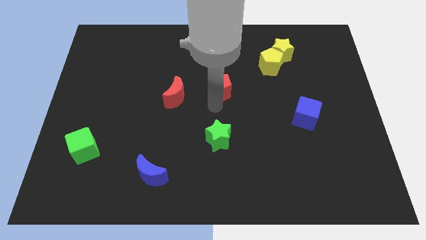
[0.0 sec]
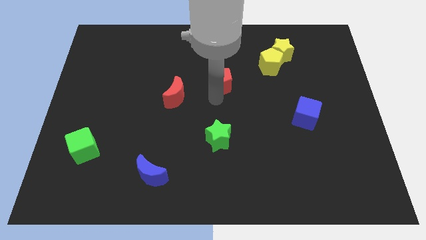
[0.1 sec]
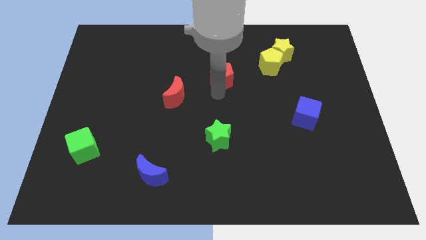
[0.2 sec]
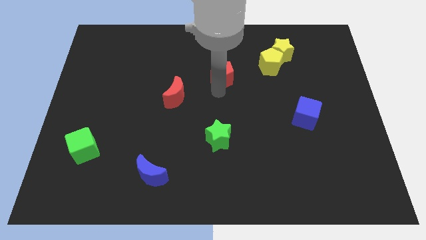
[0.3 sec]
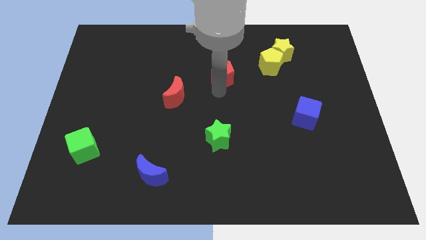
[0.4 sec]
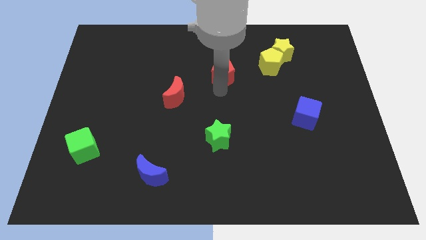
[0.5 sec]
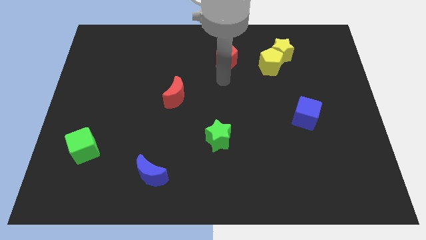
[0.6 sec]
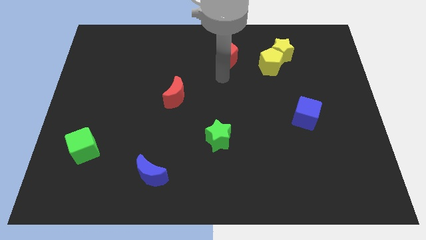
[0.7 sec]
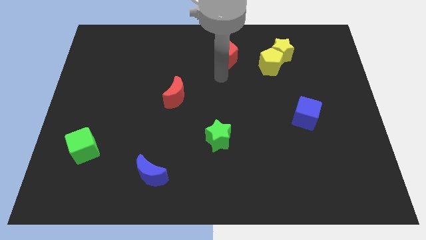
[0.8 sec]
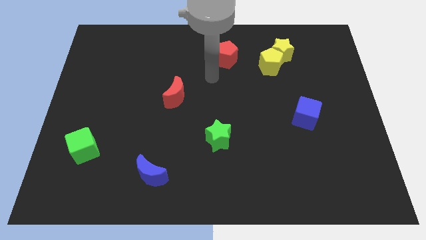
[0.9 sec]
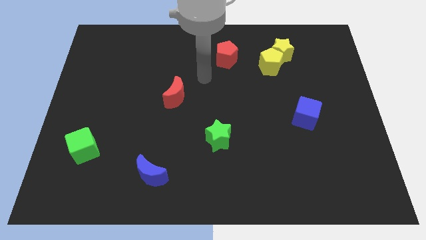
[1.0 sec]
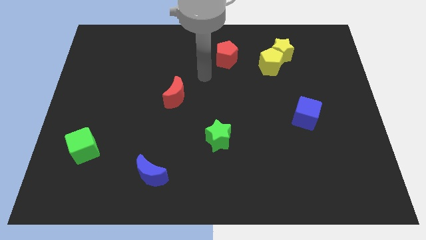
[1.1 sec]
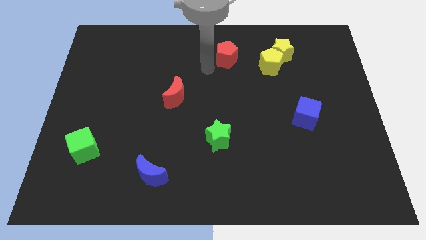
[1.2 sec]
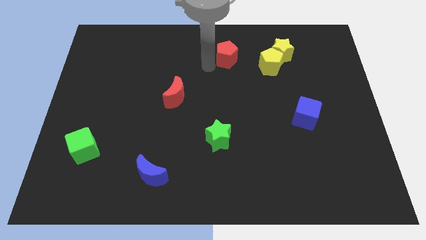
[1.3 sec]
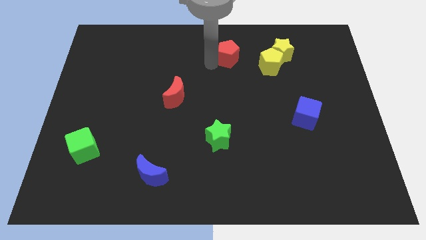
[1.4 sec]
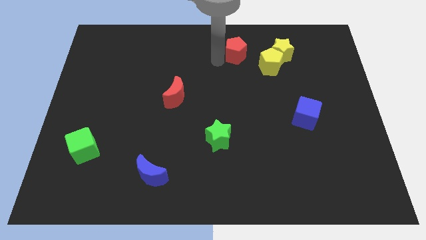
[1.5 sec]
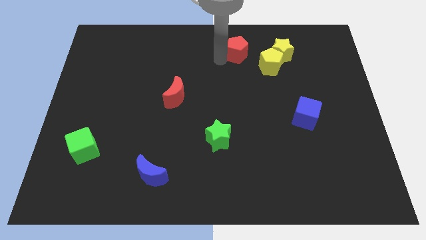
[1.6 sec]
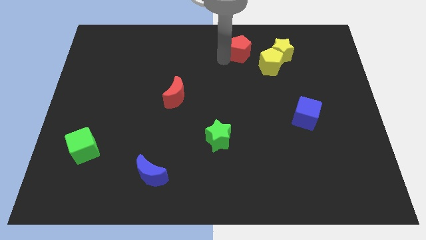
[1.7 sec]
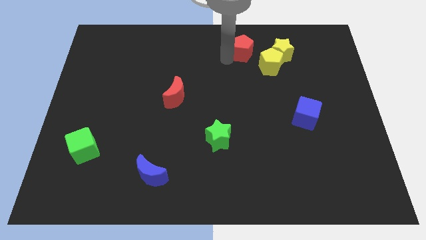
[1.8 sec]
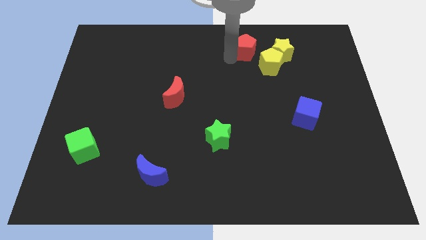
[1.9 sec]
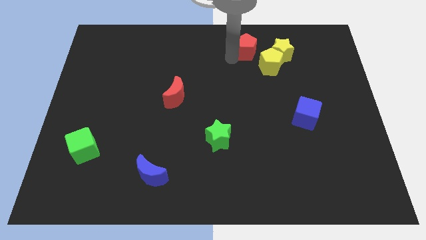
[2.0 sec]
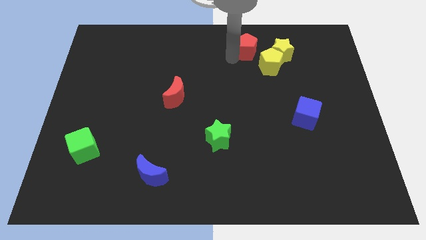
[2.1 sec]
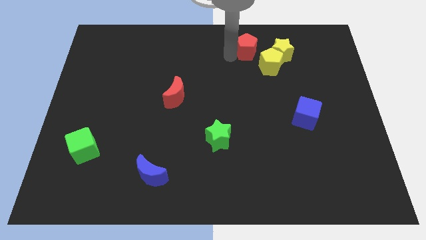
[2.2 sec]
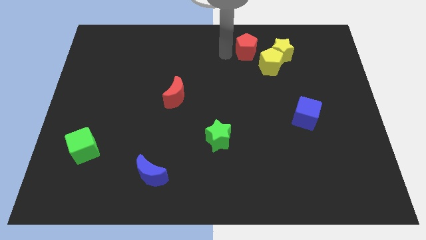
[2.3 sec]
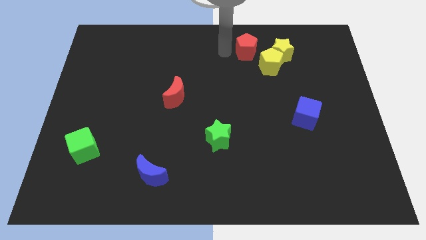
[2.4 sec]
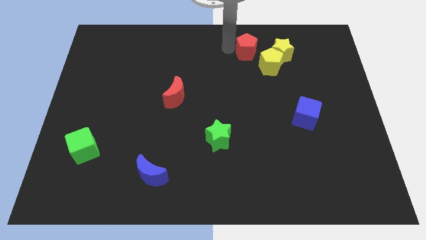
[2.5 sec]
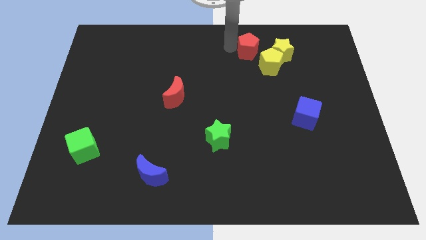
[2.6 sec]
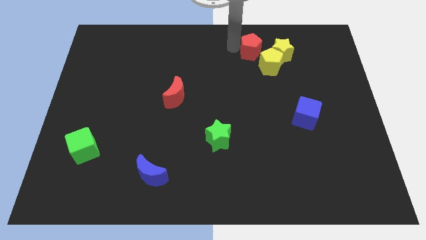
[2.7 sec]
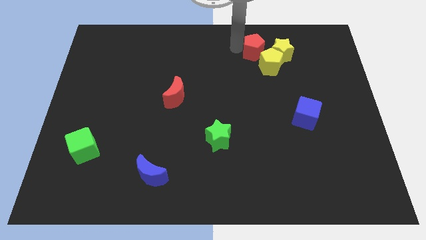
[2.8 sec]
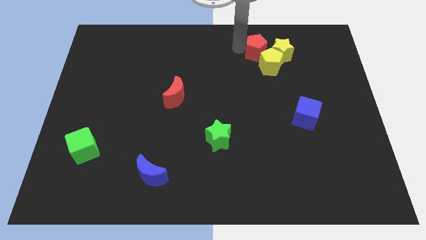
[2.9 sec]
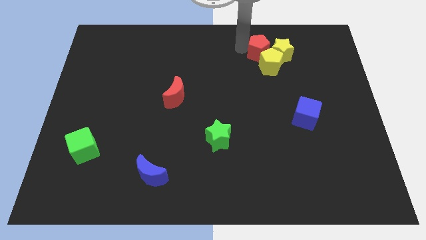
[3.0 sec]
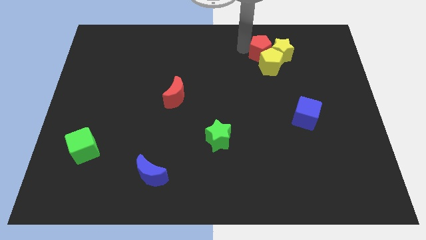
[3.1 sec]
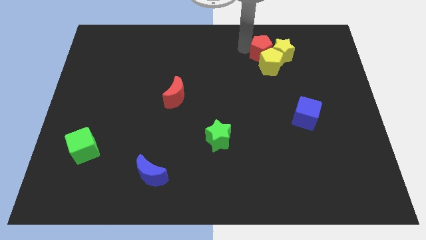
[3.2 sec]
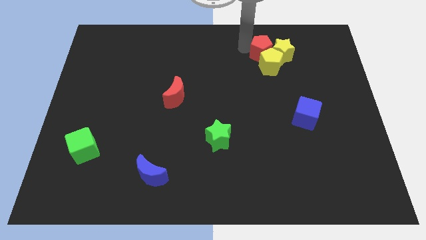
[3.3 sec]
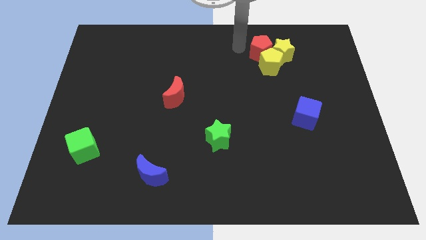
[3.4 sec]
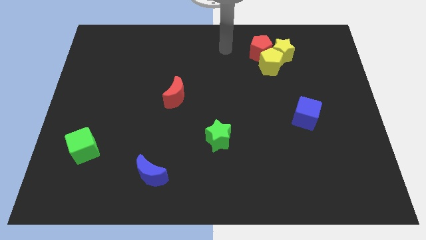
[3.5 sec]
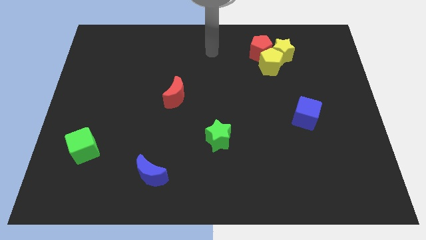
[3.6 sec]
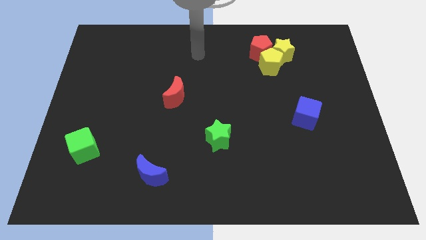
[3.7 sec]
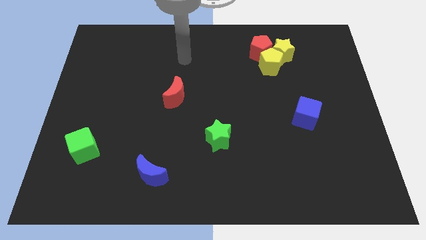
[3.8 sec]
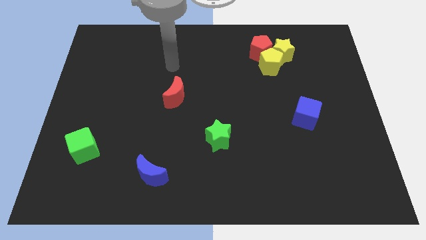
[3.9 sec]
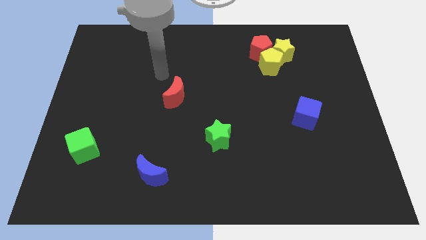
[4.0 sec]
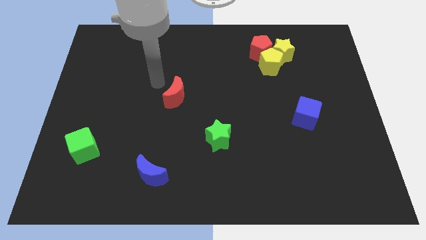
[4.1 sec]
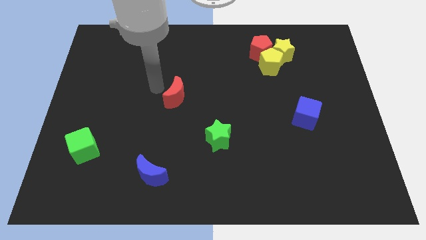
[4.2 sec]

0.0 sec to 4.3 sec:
push the red pentagon into the yellow star

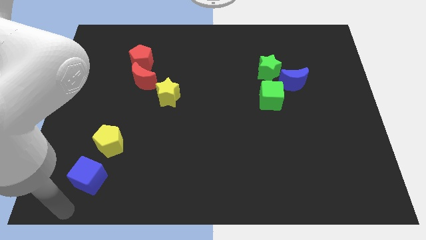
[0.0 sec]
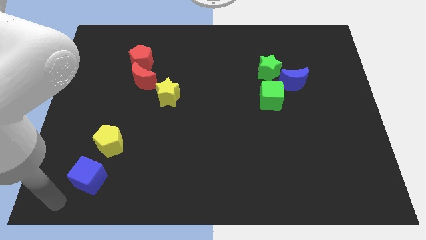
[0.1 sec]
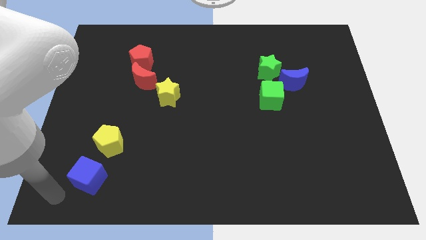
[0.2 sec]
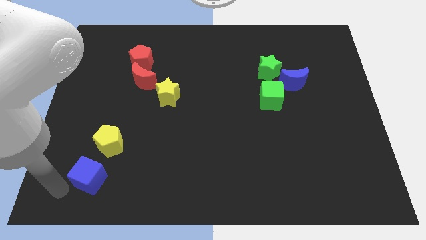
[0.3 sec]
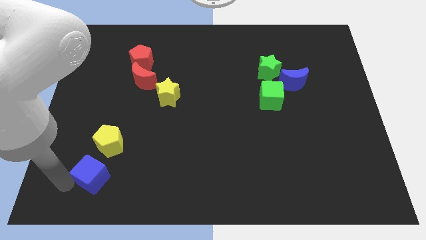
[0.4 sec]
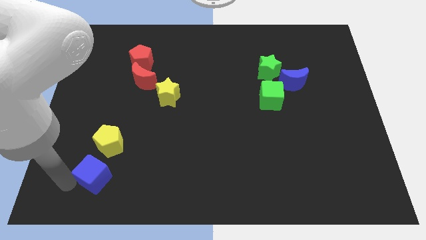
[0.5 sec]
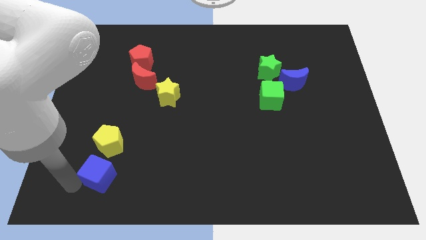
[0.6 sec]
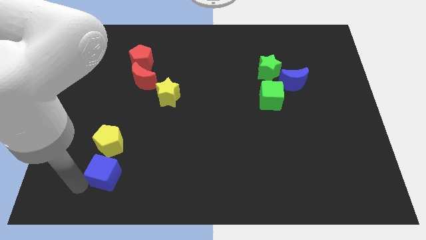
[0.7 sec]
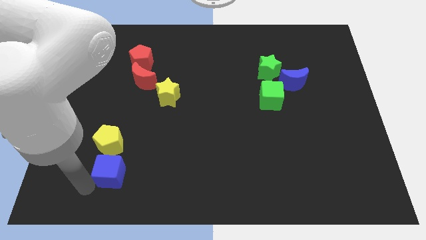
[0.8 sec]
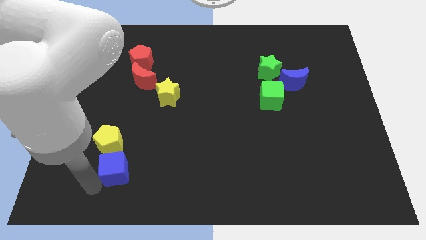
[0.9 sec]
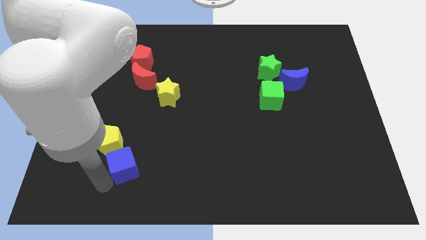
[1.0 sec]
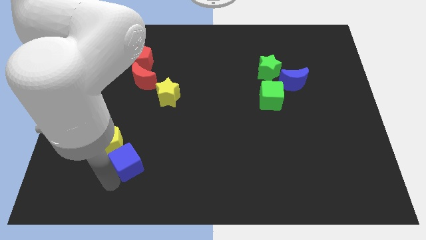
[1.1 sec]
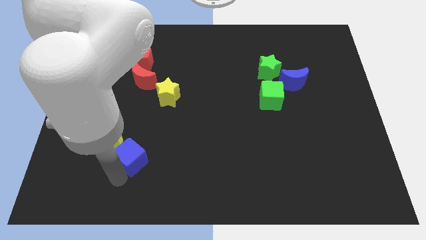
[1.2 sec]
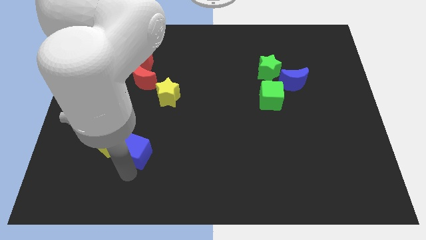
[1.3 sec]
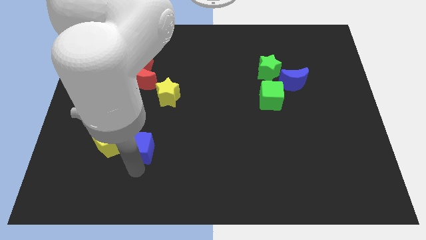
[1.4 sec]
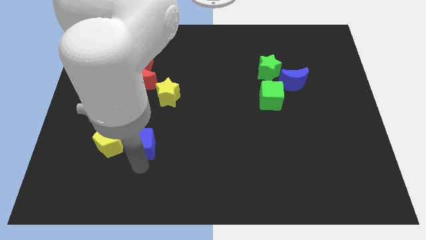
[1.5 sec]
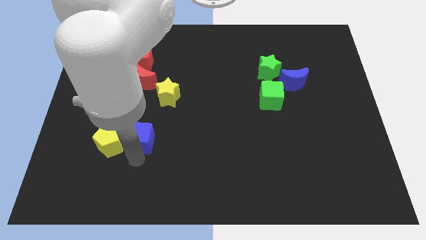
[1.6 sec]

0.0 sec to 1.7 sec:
put the blue cube right to the yellow pentagon

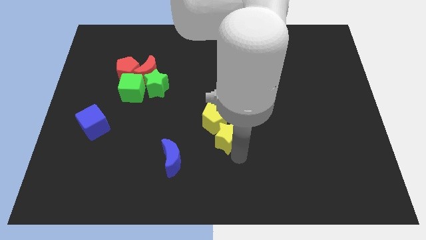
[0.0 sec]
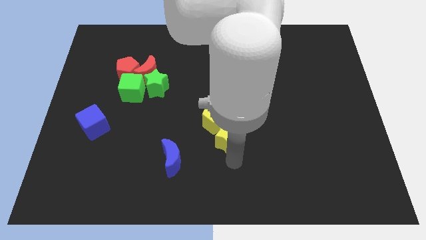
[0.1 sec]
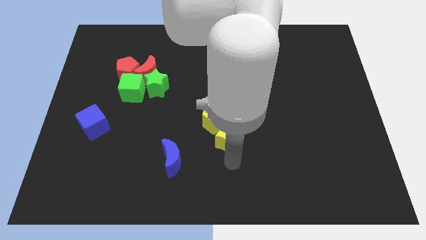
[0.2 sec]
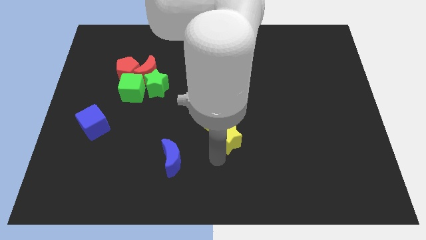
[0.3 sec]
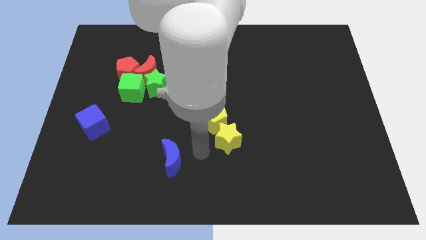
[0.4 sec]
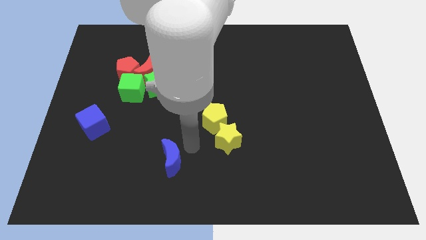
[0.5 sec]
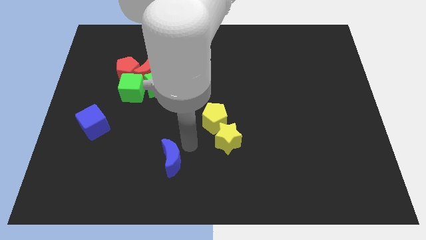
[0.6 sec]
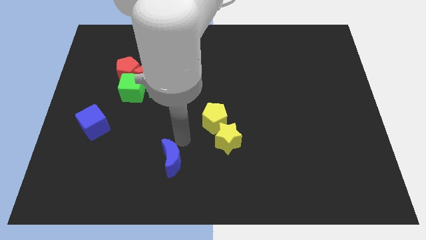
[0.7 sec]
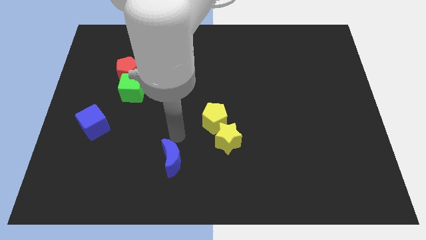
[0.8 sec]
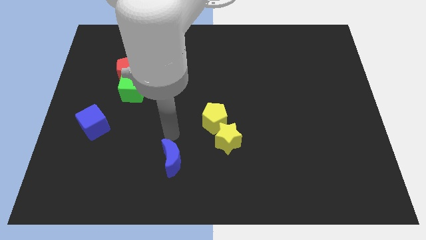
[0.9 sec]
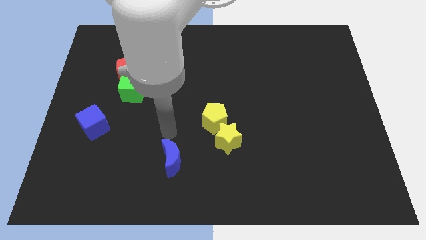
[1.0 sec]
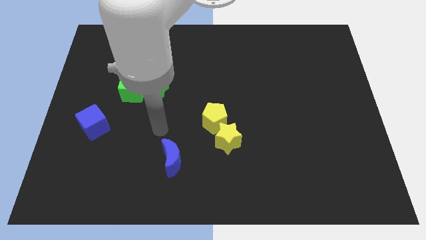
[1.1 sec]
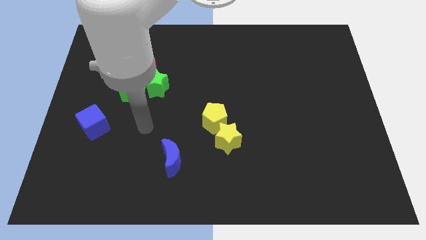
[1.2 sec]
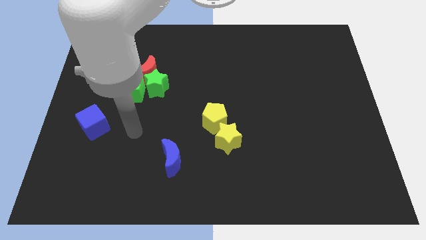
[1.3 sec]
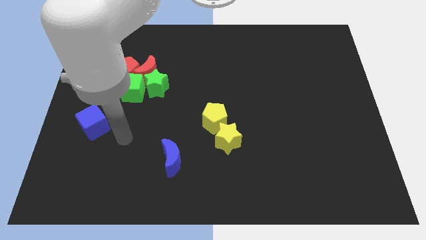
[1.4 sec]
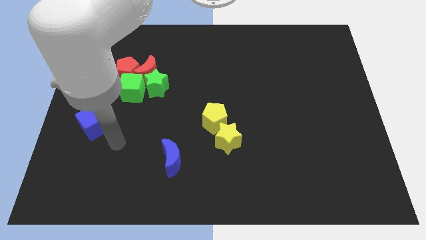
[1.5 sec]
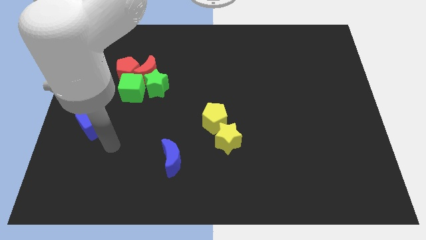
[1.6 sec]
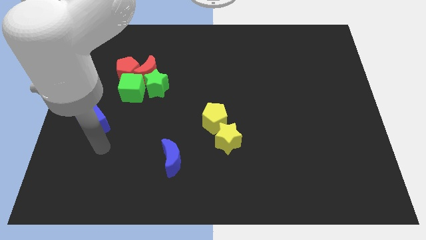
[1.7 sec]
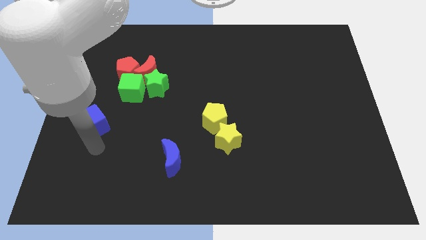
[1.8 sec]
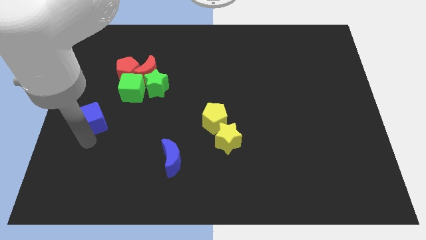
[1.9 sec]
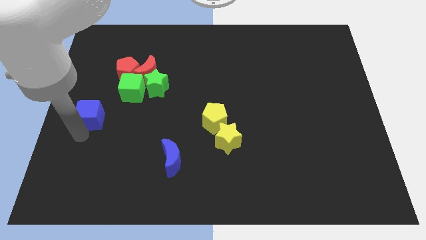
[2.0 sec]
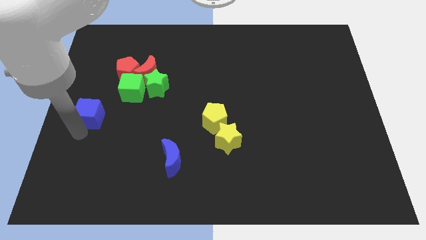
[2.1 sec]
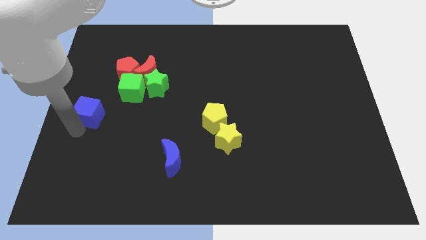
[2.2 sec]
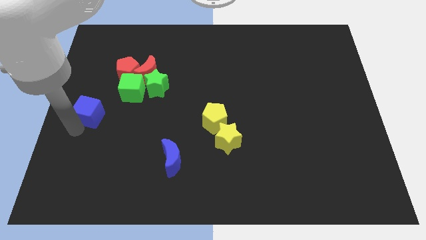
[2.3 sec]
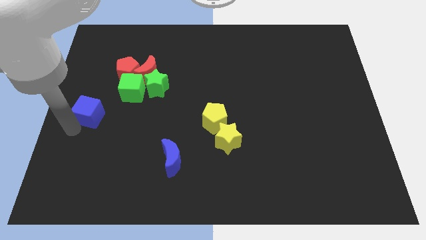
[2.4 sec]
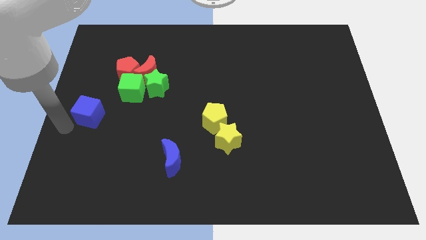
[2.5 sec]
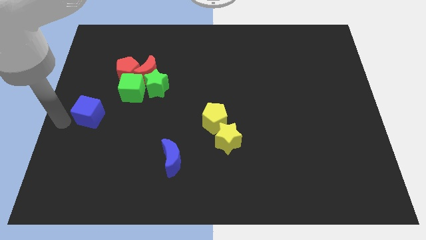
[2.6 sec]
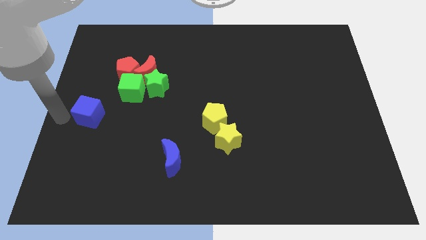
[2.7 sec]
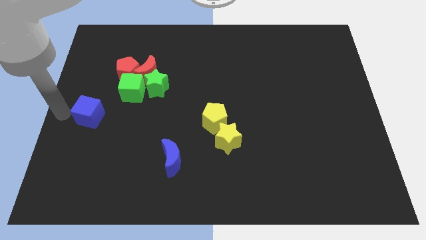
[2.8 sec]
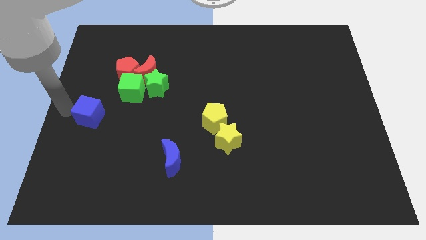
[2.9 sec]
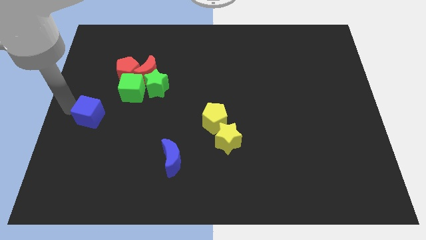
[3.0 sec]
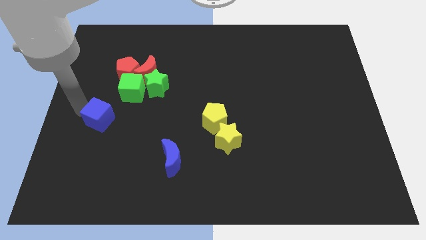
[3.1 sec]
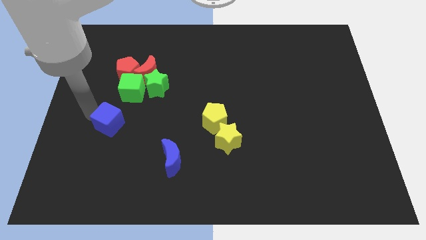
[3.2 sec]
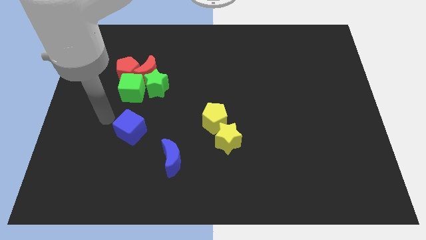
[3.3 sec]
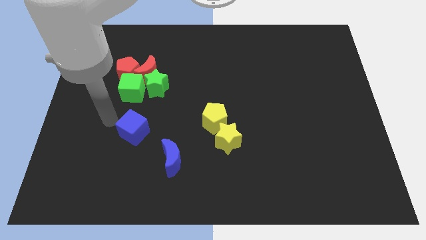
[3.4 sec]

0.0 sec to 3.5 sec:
move blue cube to the left of yellow pentagon
